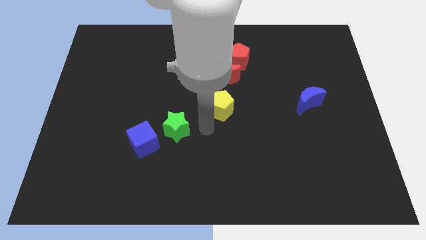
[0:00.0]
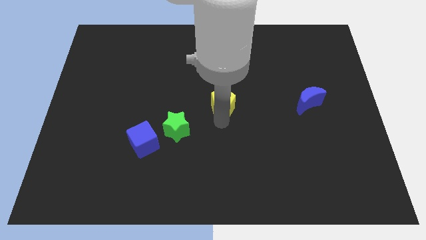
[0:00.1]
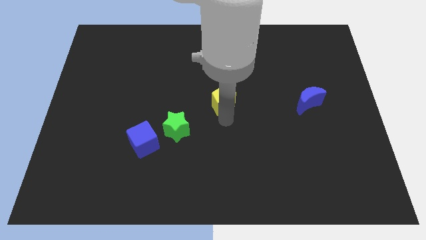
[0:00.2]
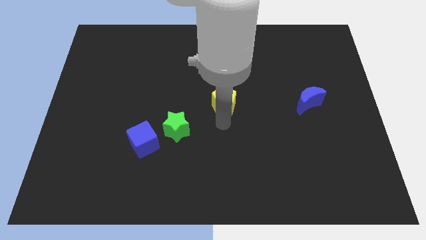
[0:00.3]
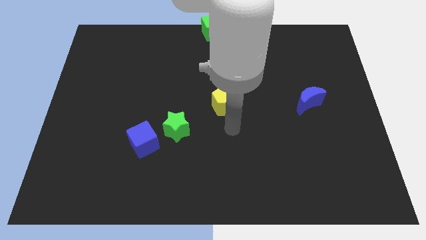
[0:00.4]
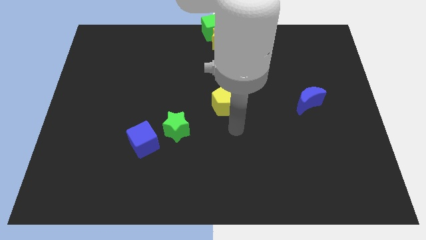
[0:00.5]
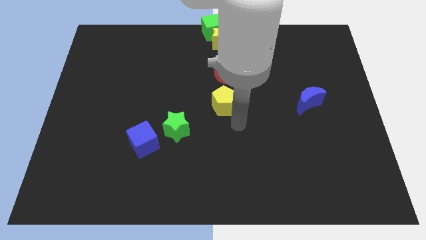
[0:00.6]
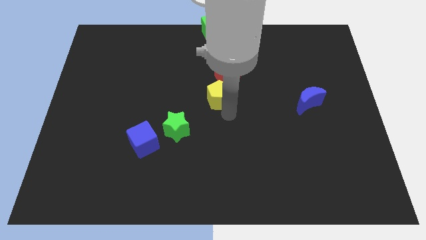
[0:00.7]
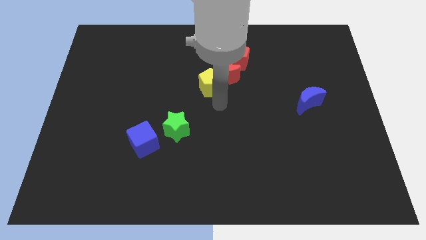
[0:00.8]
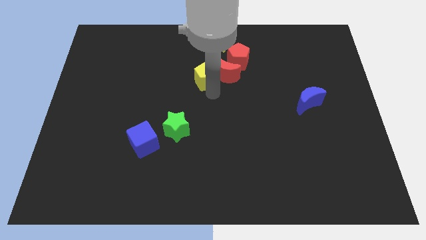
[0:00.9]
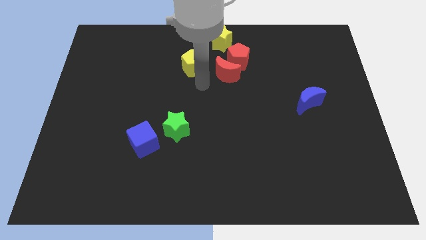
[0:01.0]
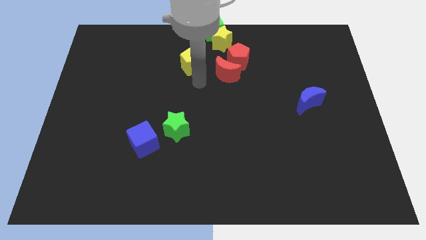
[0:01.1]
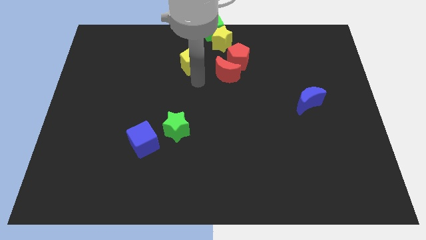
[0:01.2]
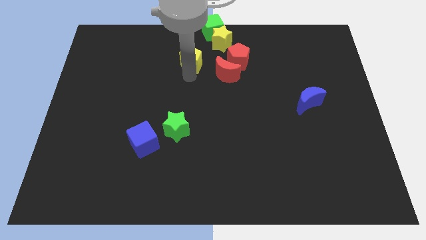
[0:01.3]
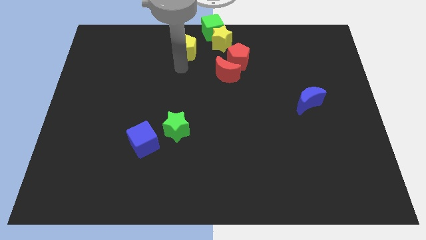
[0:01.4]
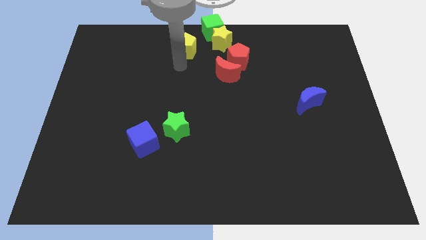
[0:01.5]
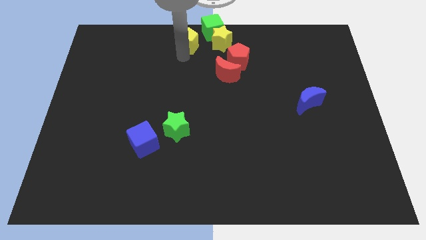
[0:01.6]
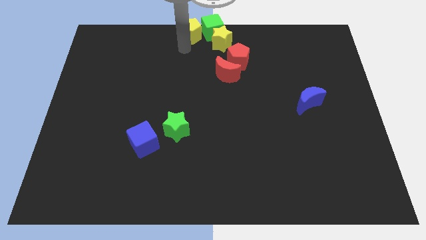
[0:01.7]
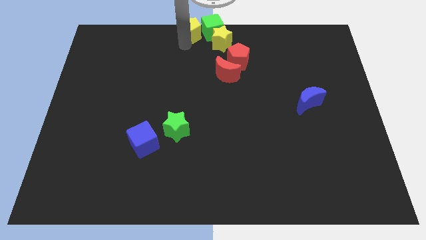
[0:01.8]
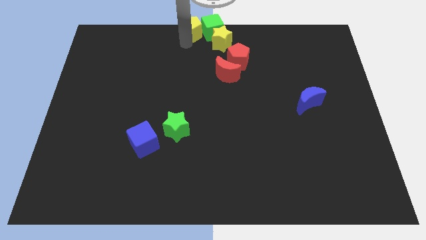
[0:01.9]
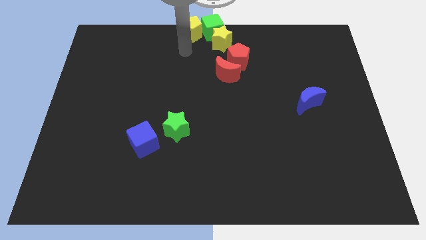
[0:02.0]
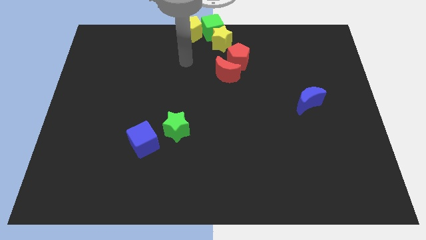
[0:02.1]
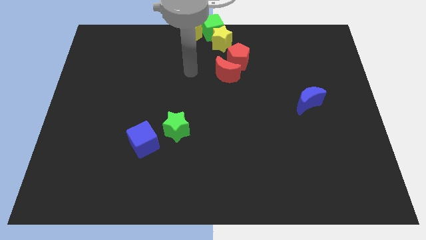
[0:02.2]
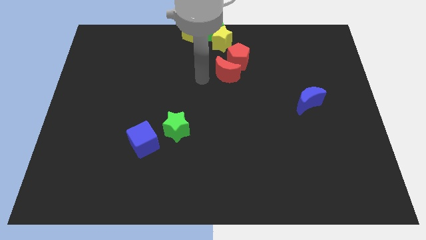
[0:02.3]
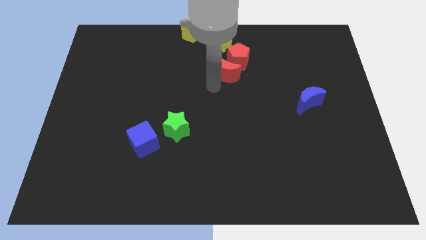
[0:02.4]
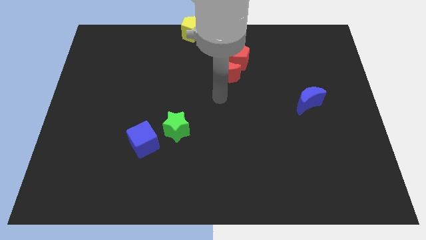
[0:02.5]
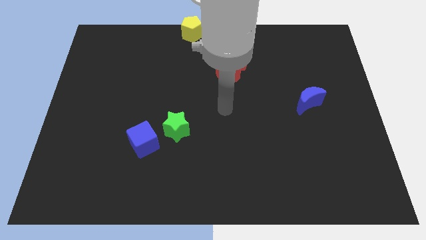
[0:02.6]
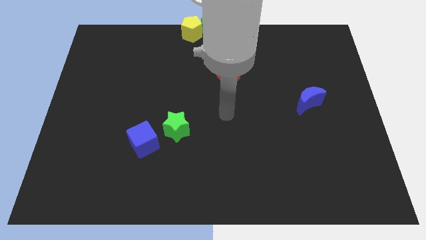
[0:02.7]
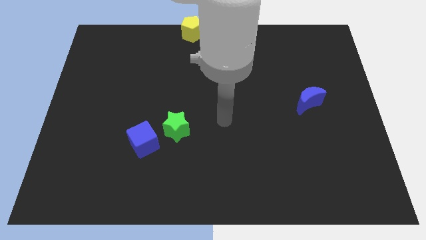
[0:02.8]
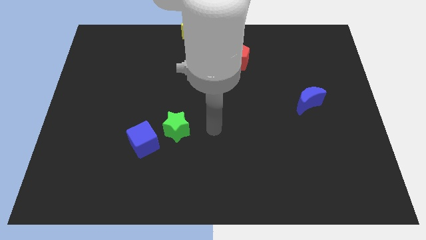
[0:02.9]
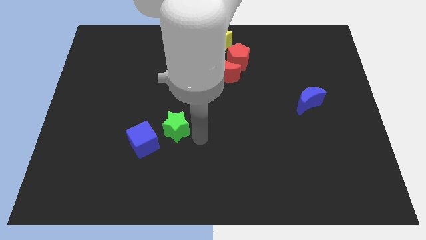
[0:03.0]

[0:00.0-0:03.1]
move the yellow pentagon to the left of the green cube

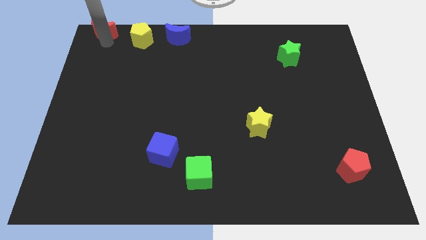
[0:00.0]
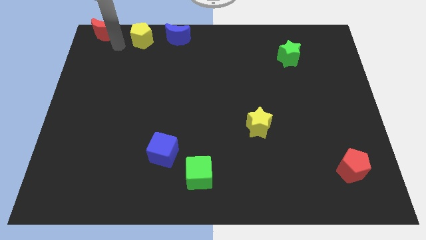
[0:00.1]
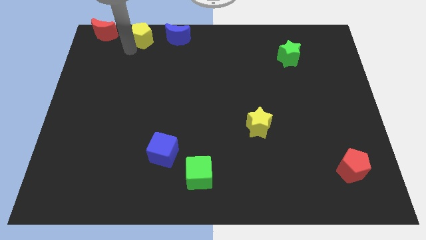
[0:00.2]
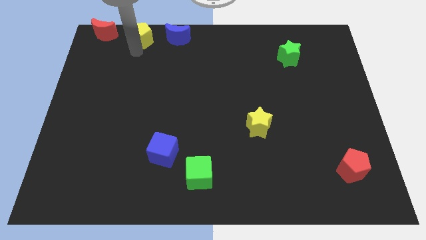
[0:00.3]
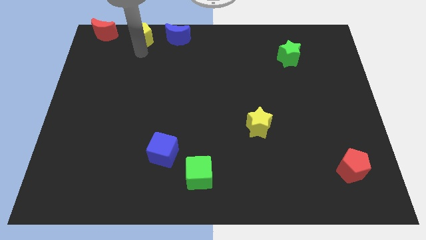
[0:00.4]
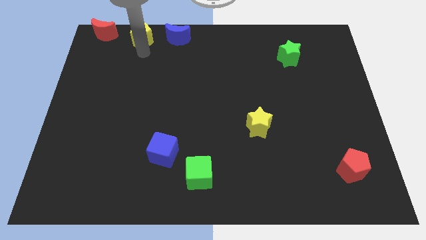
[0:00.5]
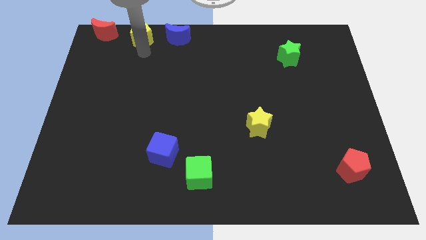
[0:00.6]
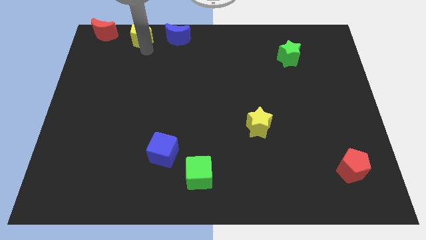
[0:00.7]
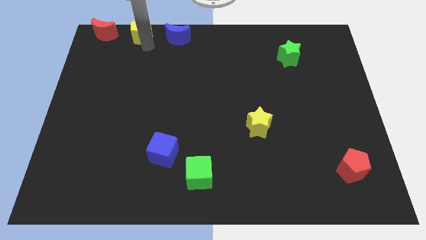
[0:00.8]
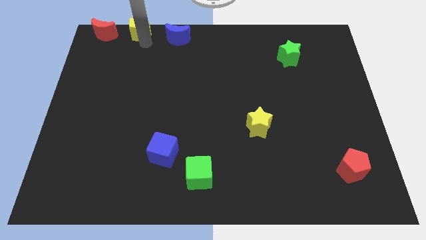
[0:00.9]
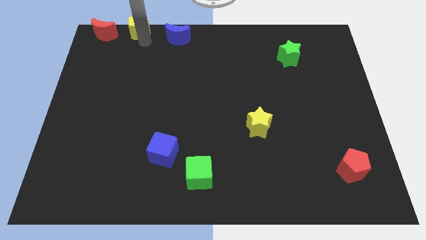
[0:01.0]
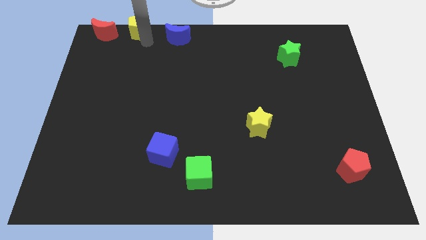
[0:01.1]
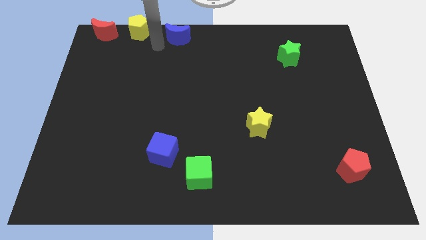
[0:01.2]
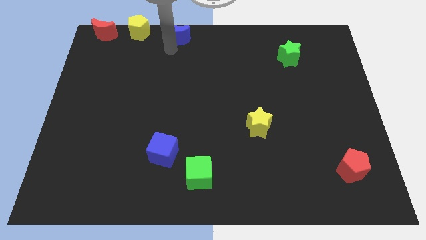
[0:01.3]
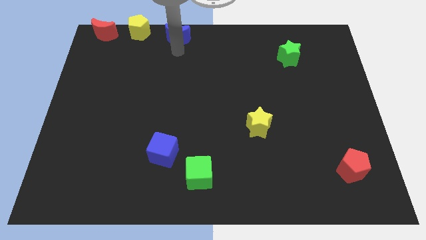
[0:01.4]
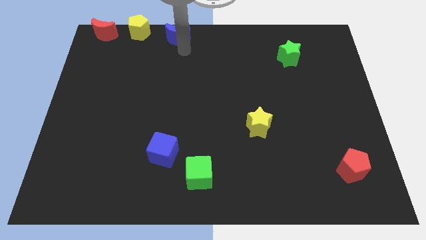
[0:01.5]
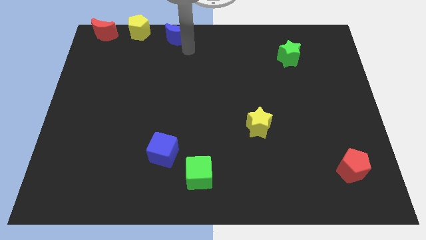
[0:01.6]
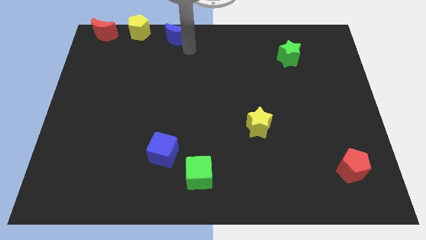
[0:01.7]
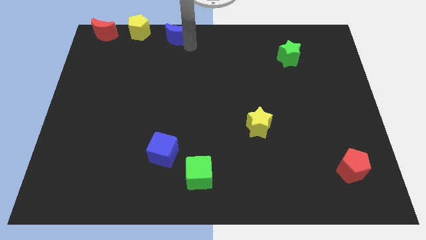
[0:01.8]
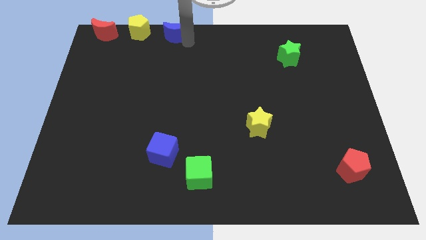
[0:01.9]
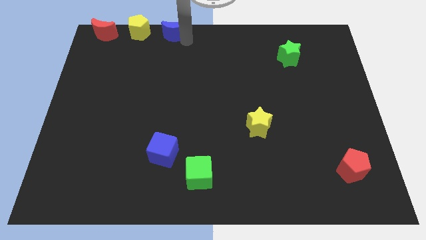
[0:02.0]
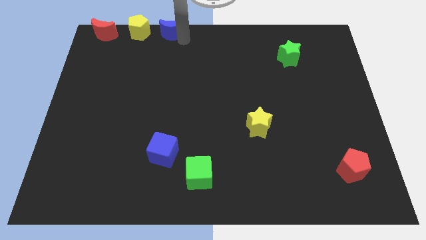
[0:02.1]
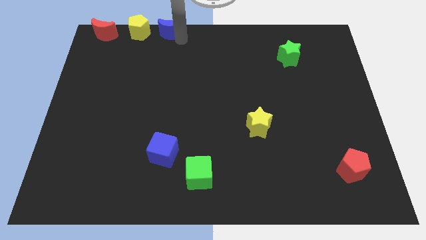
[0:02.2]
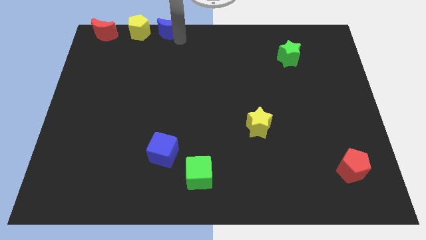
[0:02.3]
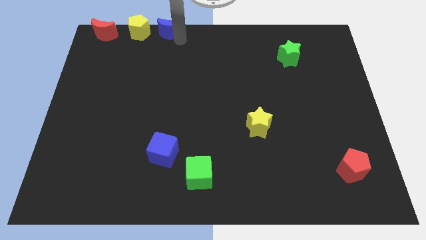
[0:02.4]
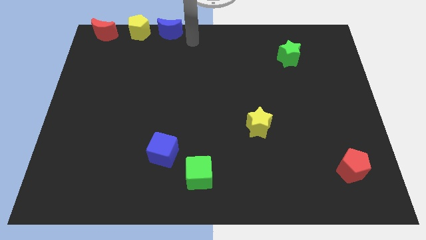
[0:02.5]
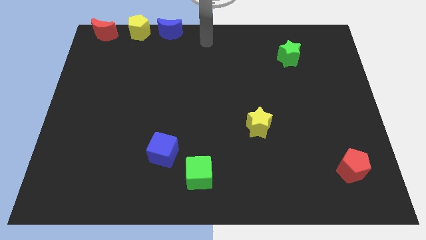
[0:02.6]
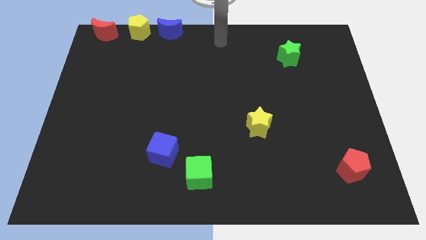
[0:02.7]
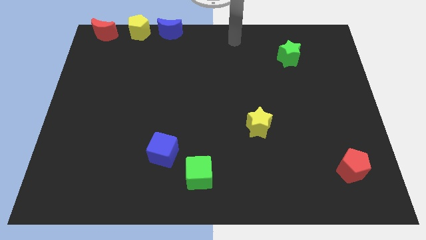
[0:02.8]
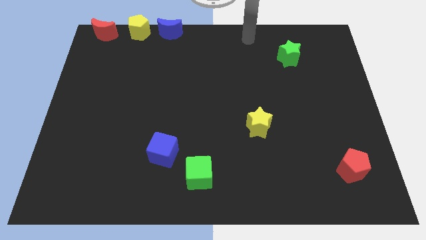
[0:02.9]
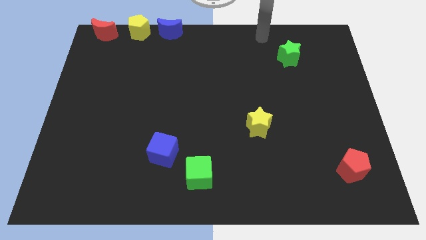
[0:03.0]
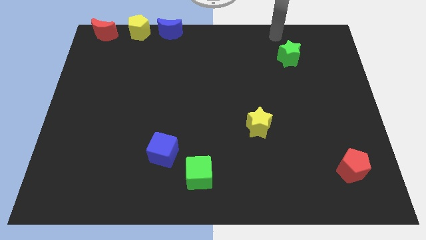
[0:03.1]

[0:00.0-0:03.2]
adjust the yellow pentagon and blue moon horizontally to the right side of the red moon

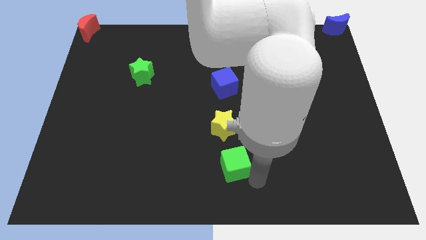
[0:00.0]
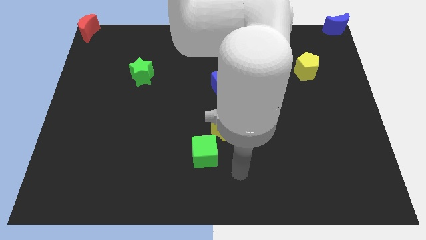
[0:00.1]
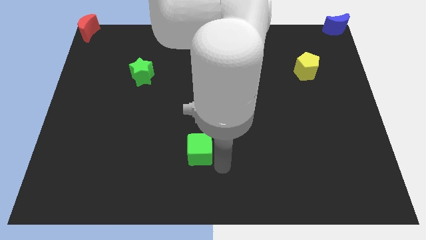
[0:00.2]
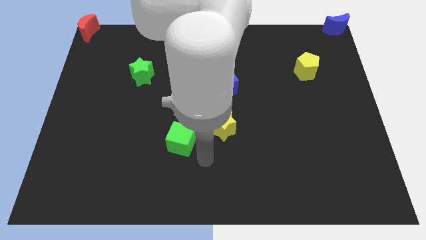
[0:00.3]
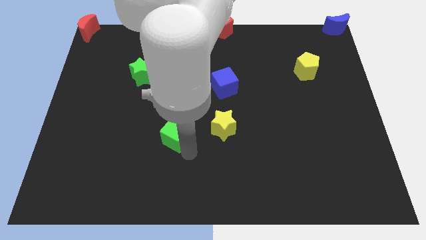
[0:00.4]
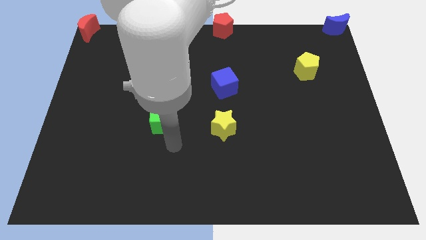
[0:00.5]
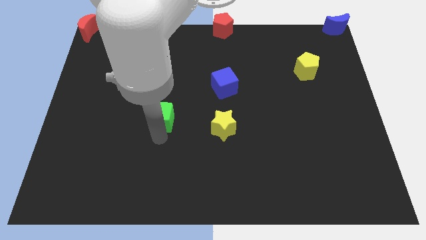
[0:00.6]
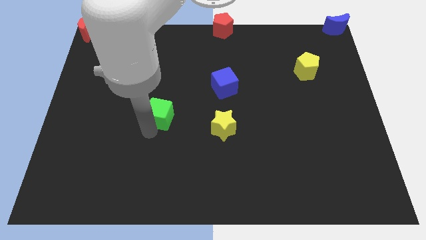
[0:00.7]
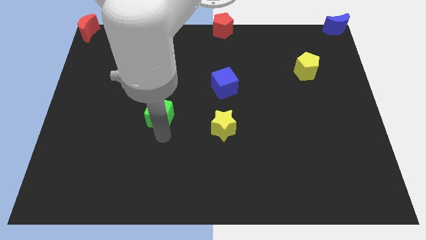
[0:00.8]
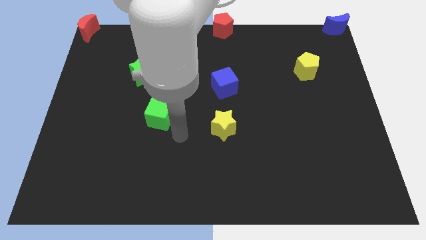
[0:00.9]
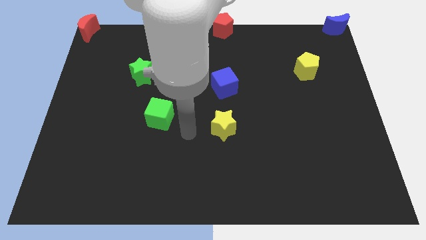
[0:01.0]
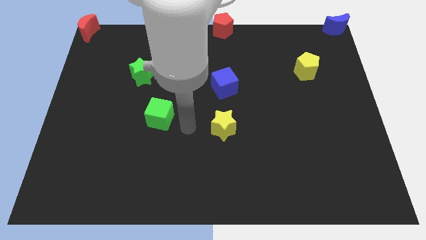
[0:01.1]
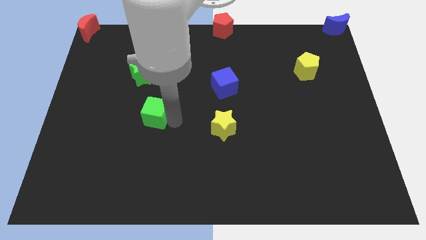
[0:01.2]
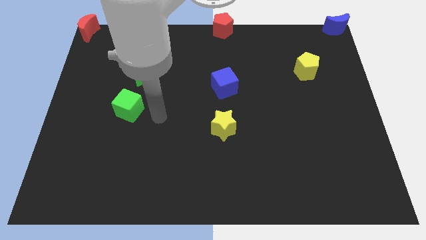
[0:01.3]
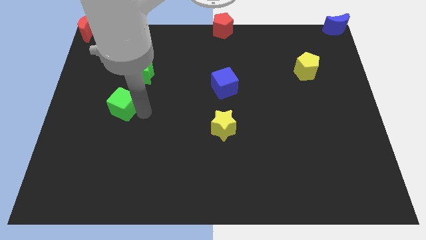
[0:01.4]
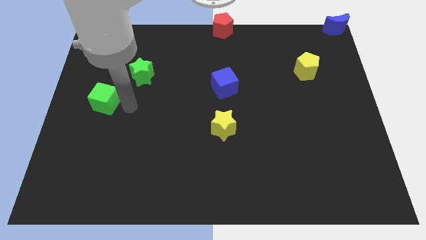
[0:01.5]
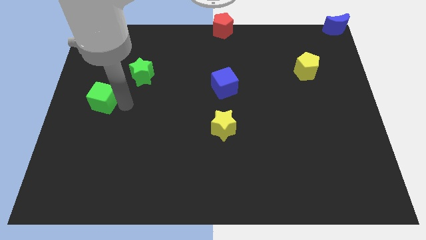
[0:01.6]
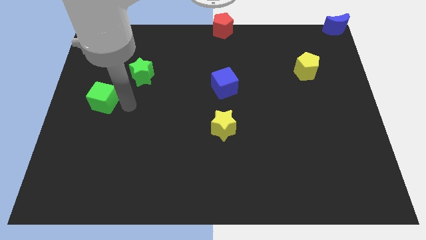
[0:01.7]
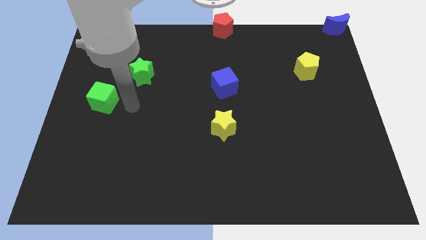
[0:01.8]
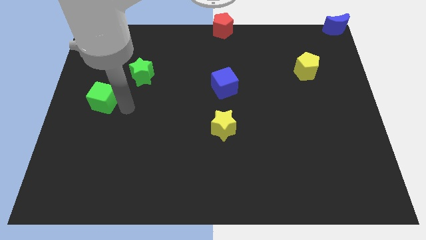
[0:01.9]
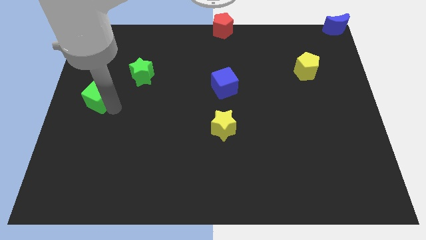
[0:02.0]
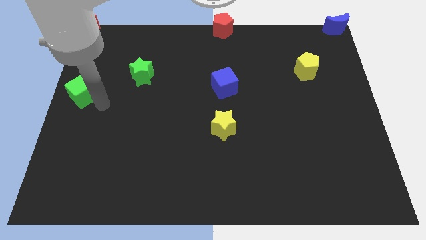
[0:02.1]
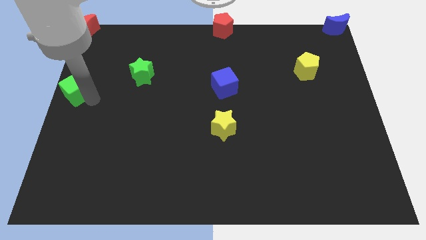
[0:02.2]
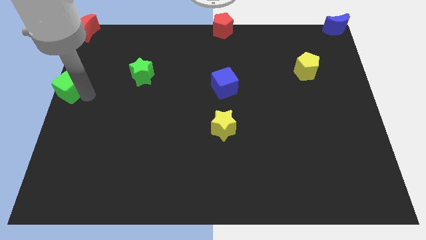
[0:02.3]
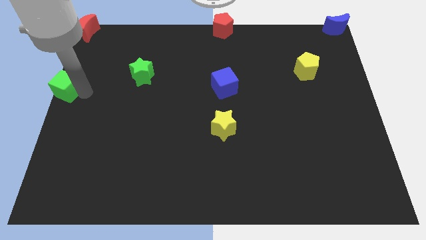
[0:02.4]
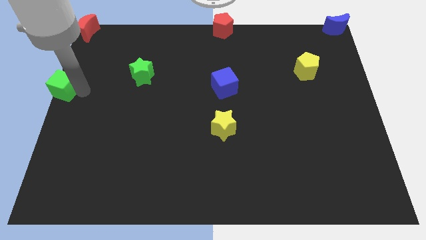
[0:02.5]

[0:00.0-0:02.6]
push the green cube to the bottom of the red crescent
